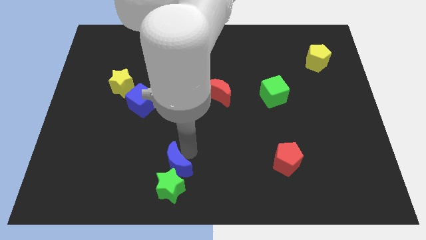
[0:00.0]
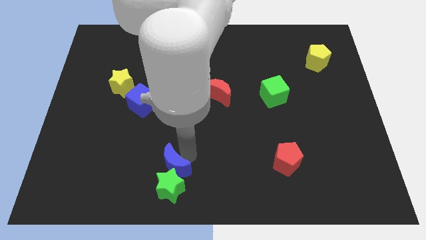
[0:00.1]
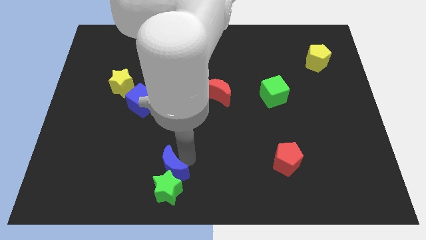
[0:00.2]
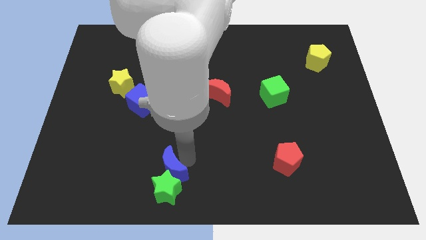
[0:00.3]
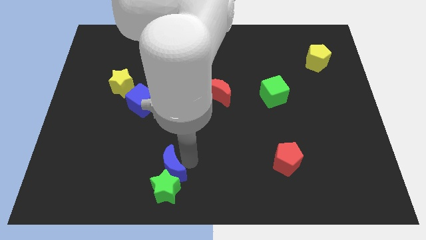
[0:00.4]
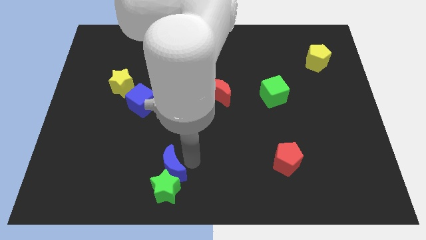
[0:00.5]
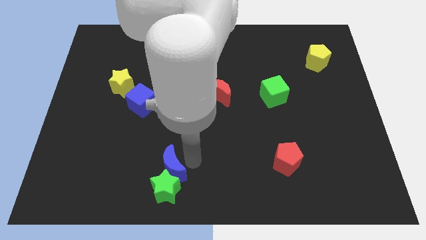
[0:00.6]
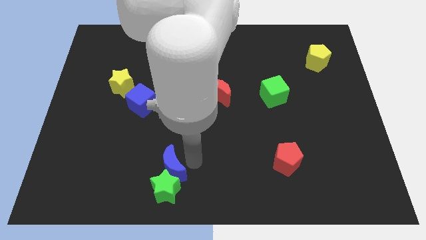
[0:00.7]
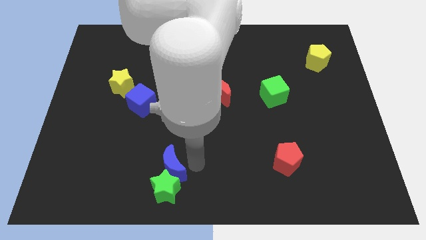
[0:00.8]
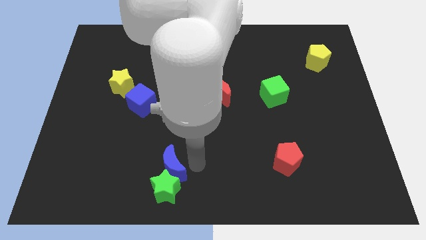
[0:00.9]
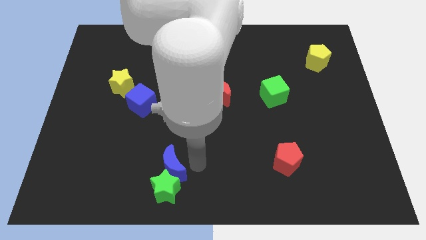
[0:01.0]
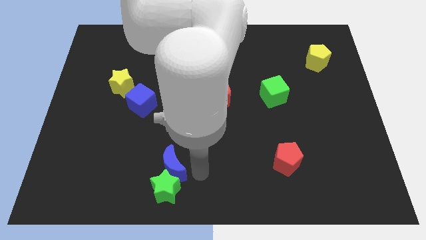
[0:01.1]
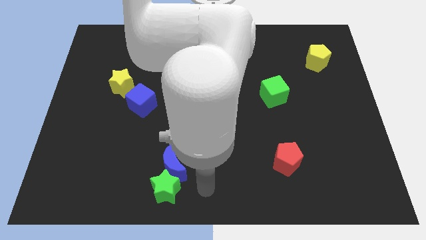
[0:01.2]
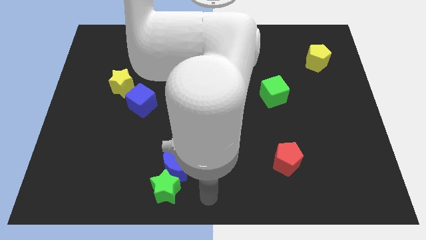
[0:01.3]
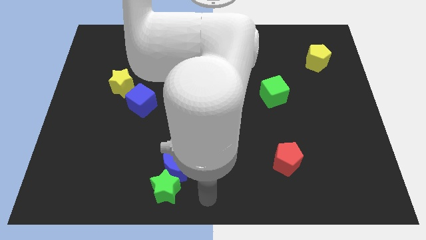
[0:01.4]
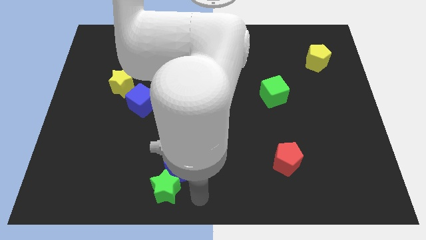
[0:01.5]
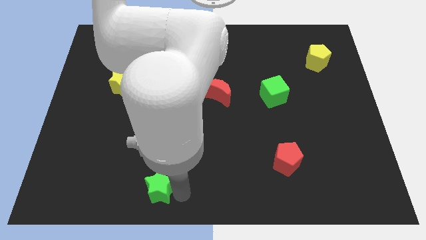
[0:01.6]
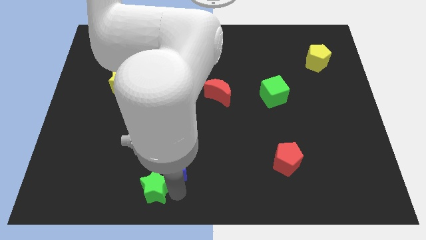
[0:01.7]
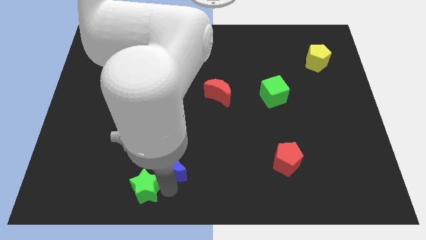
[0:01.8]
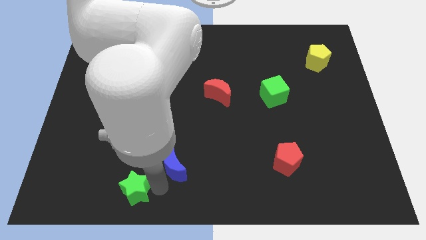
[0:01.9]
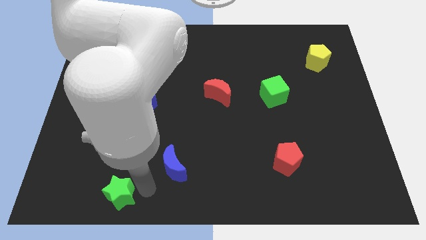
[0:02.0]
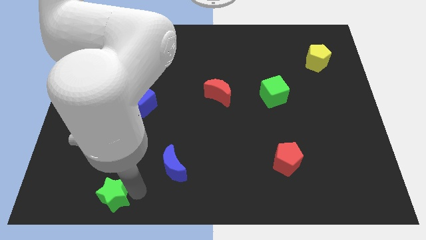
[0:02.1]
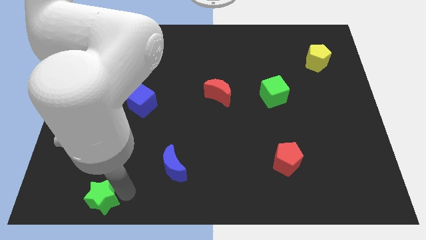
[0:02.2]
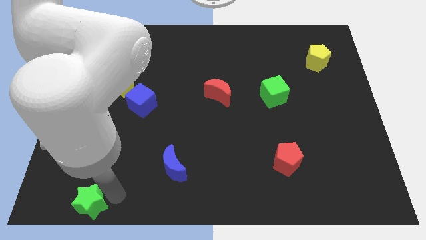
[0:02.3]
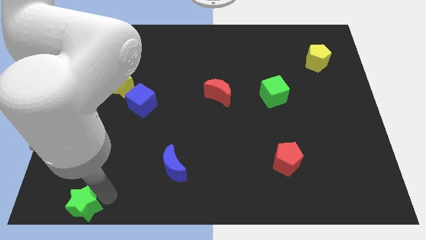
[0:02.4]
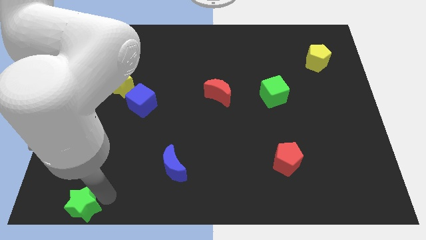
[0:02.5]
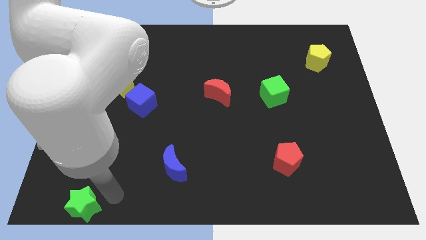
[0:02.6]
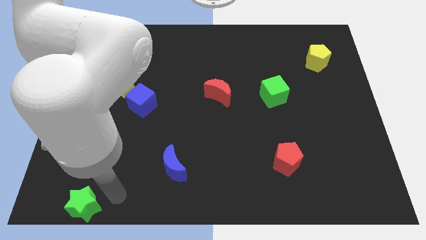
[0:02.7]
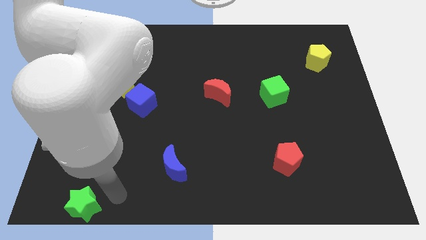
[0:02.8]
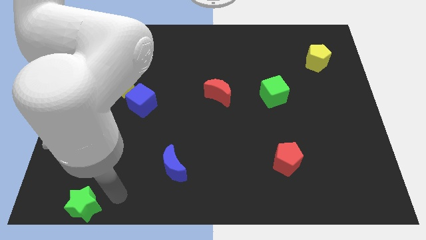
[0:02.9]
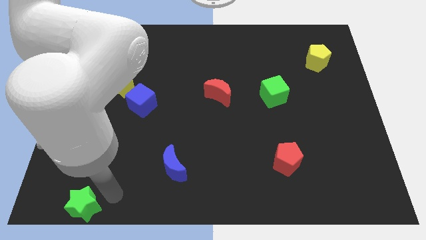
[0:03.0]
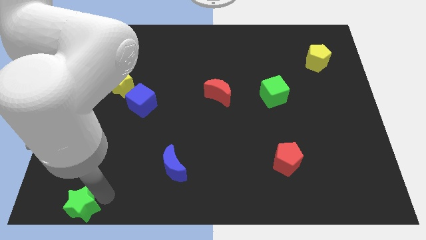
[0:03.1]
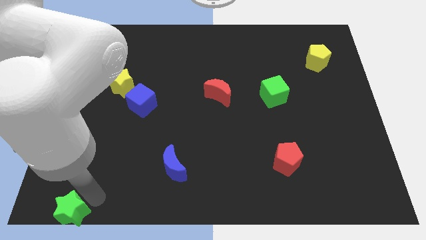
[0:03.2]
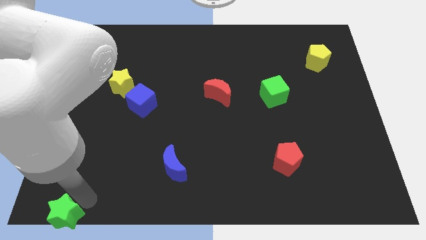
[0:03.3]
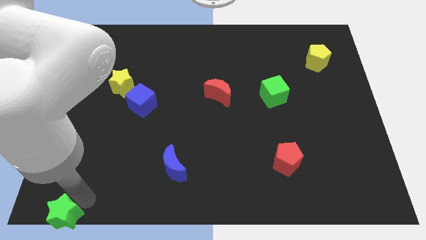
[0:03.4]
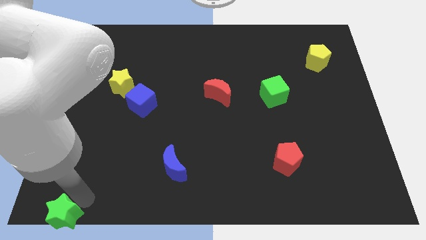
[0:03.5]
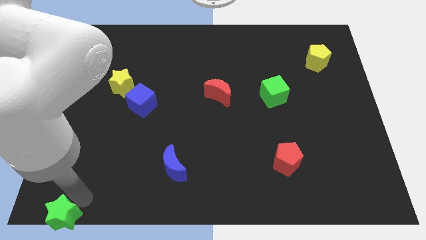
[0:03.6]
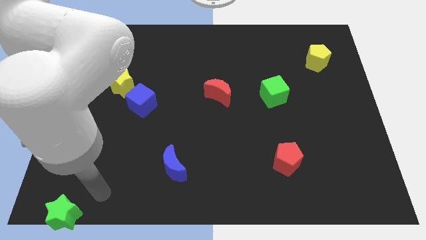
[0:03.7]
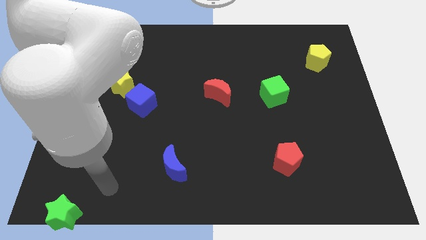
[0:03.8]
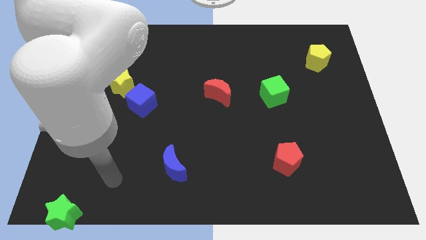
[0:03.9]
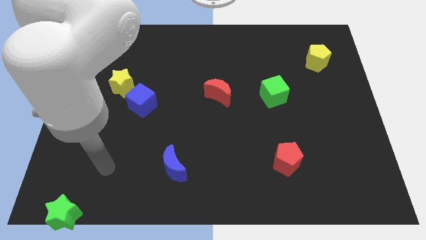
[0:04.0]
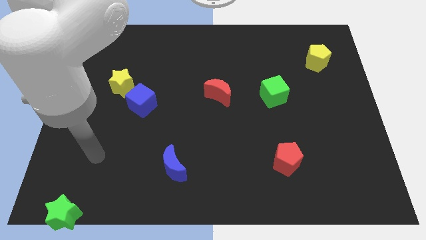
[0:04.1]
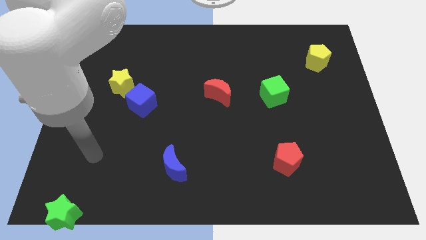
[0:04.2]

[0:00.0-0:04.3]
slide the green star to the bottom side of the table

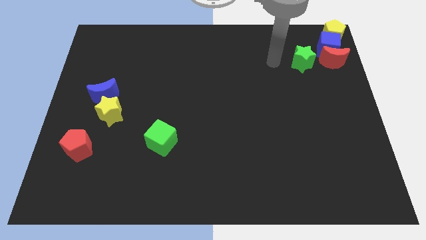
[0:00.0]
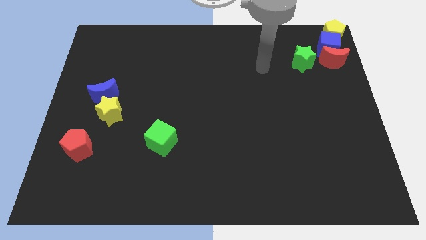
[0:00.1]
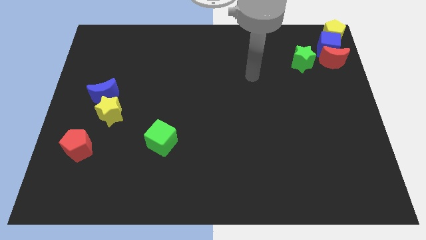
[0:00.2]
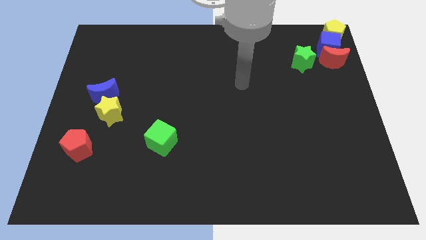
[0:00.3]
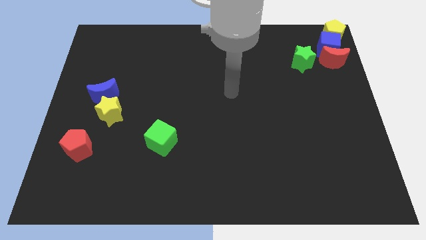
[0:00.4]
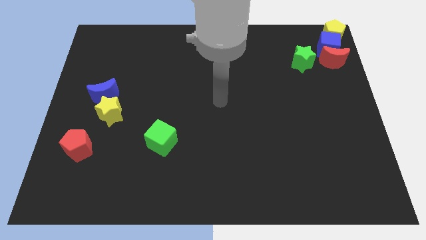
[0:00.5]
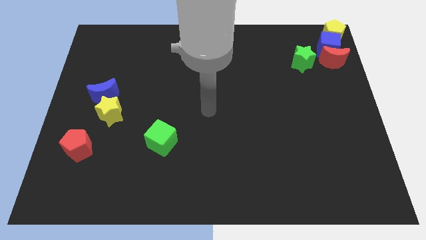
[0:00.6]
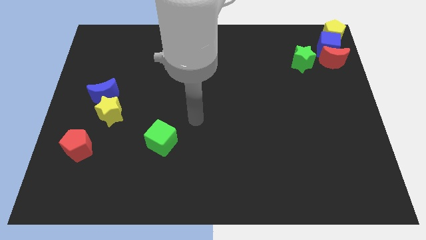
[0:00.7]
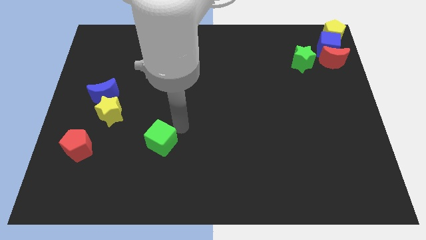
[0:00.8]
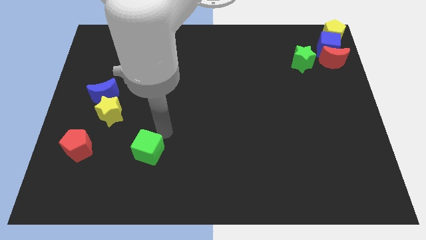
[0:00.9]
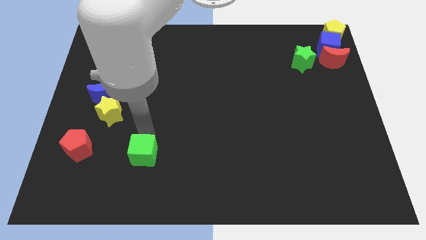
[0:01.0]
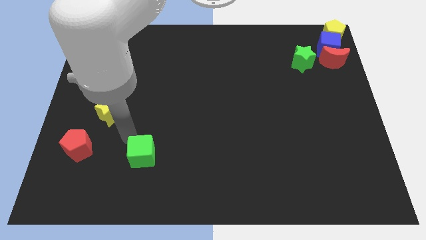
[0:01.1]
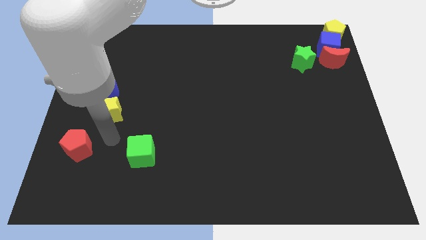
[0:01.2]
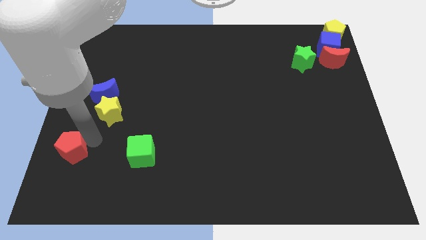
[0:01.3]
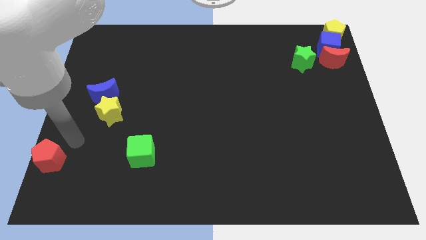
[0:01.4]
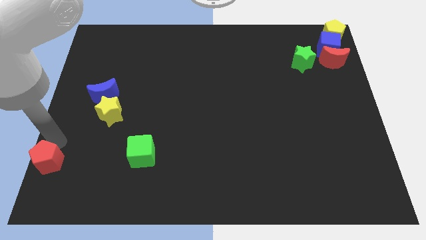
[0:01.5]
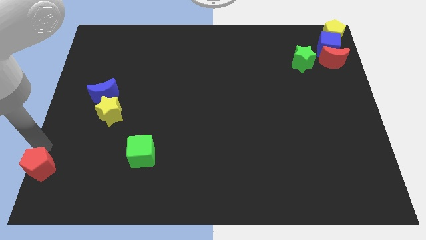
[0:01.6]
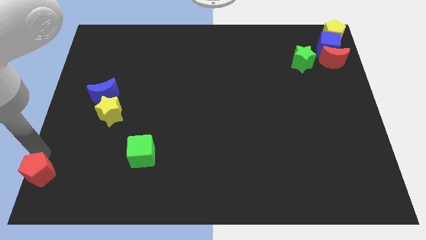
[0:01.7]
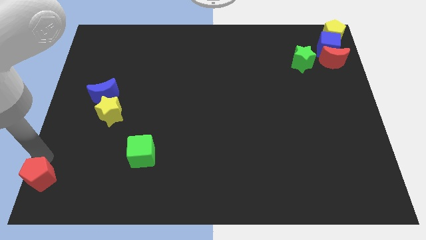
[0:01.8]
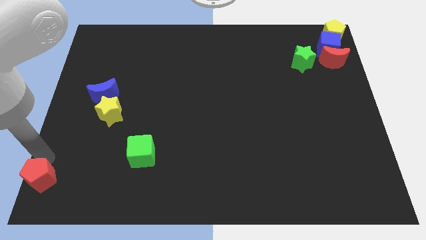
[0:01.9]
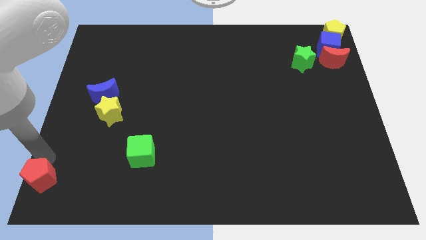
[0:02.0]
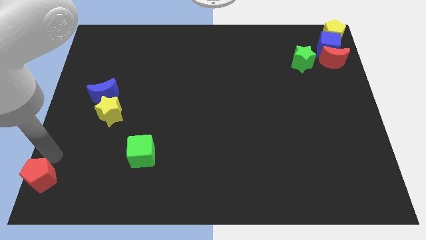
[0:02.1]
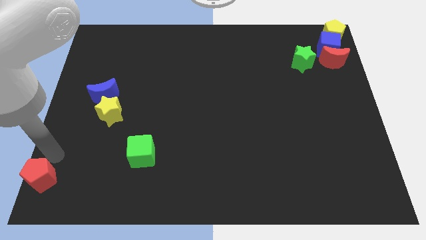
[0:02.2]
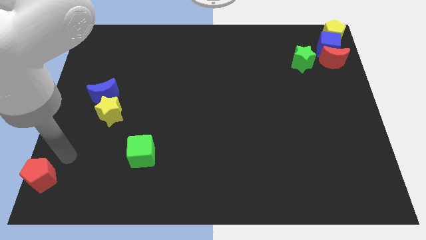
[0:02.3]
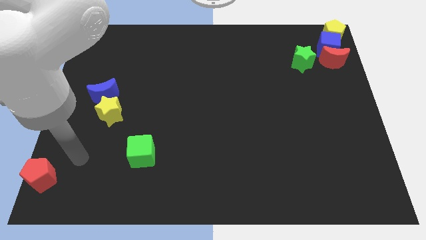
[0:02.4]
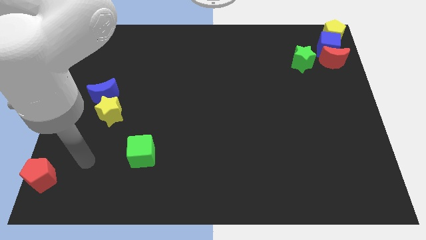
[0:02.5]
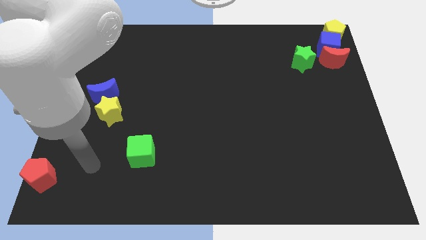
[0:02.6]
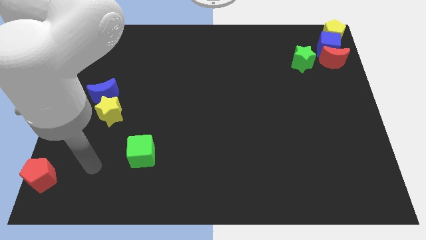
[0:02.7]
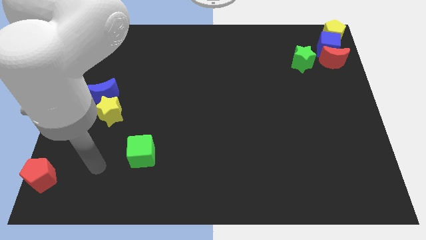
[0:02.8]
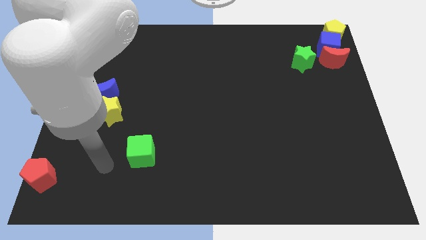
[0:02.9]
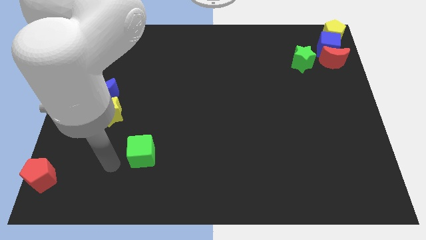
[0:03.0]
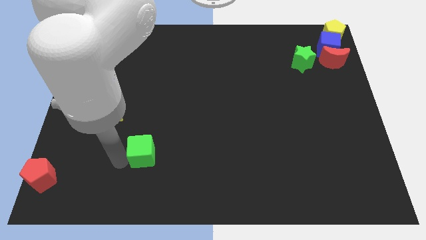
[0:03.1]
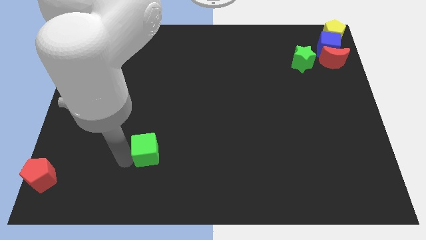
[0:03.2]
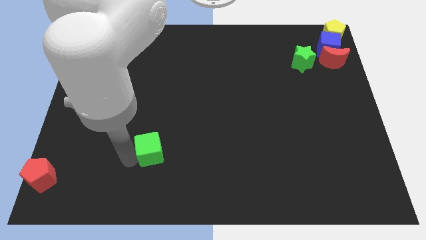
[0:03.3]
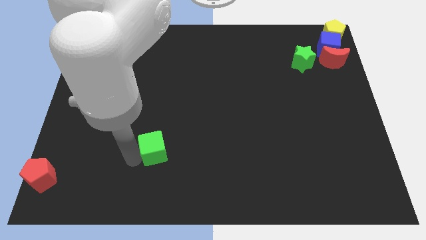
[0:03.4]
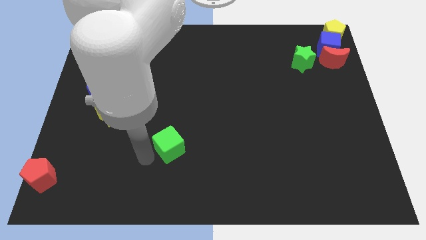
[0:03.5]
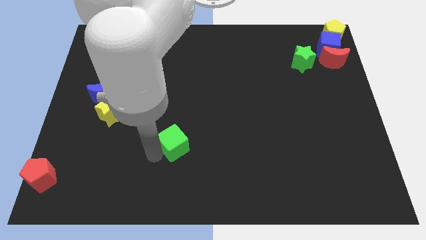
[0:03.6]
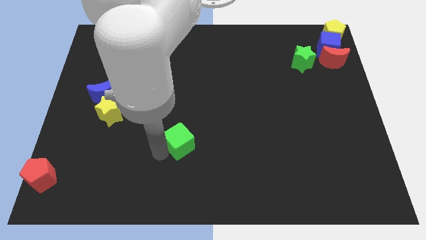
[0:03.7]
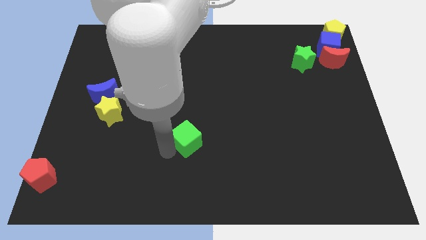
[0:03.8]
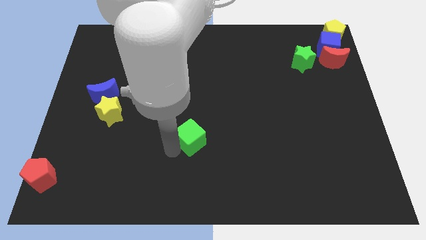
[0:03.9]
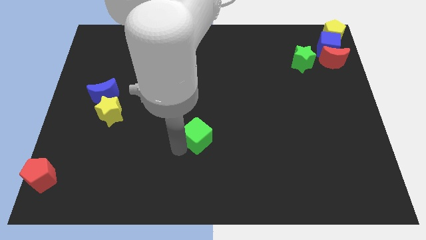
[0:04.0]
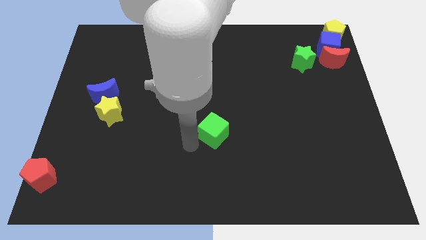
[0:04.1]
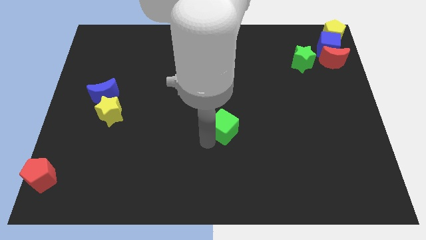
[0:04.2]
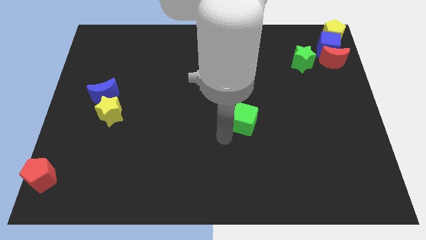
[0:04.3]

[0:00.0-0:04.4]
move the green cube towards the center of the board

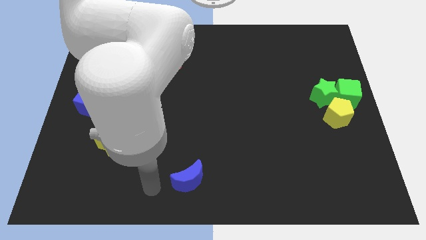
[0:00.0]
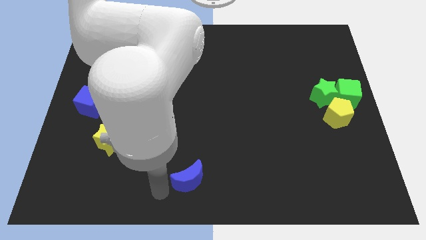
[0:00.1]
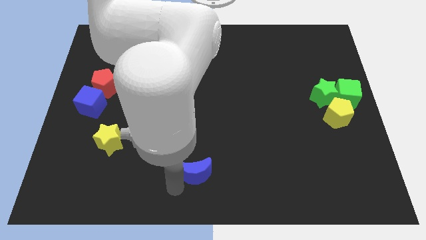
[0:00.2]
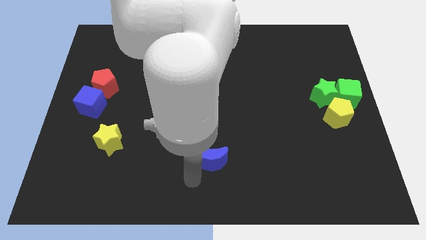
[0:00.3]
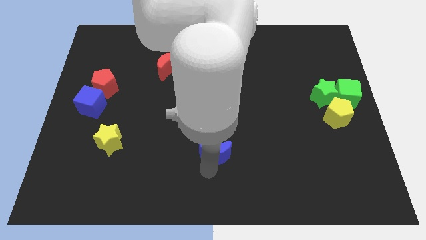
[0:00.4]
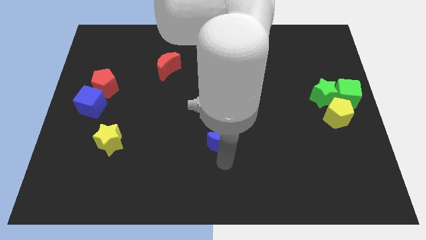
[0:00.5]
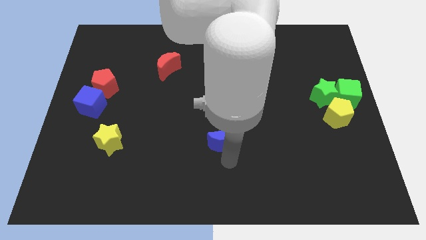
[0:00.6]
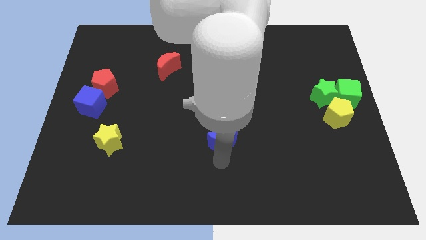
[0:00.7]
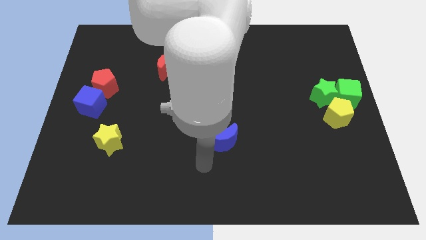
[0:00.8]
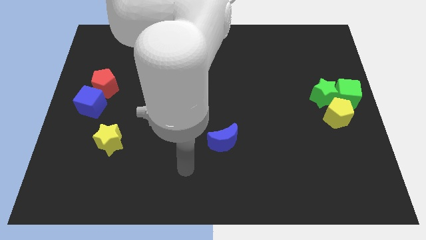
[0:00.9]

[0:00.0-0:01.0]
put the blue crescent parallel to the yellow star
